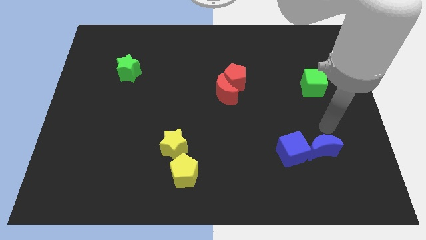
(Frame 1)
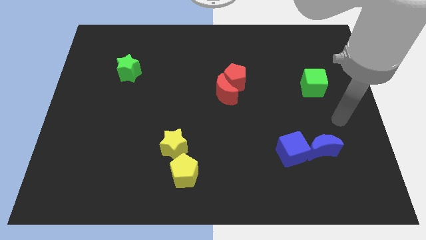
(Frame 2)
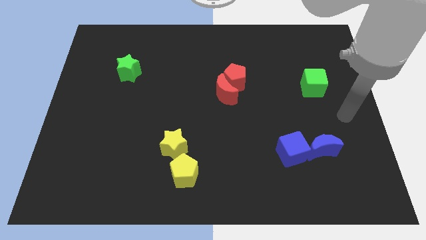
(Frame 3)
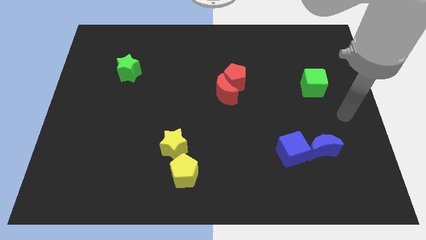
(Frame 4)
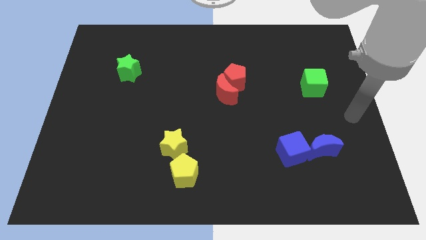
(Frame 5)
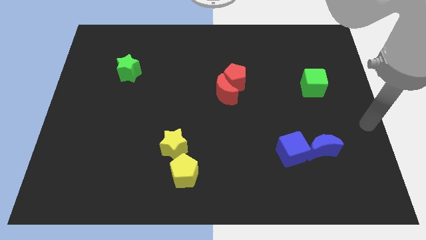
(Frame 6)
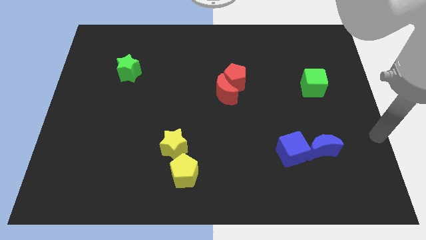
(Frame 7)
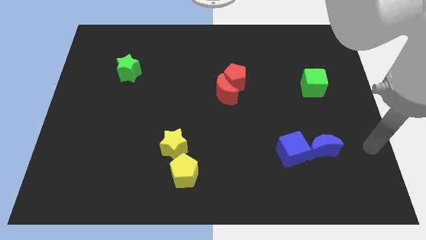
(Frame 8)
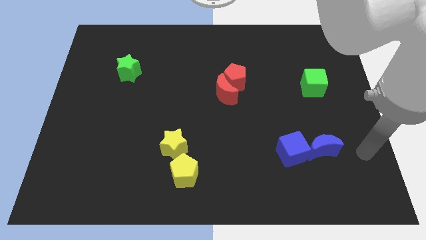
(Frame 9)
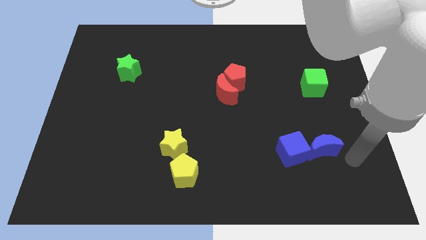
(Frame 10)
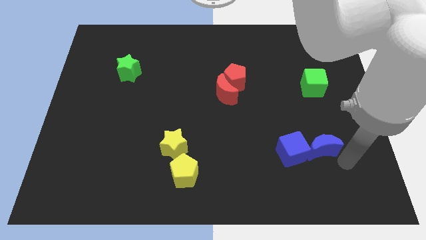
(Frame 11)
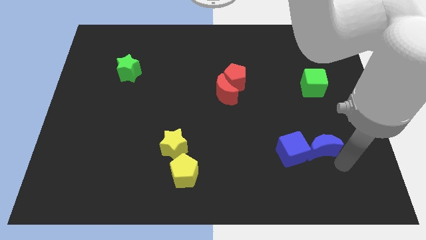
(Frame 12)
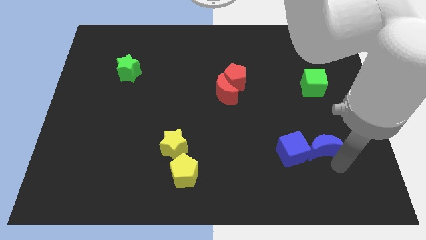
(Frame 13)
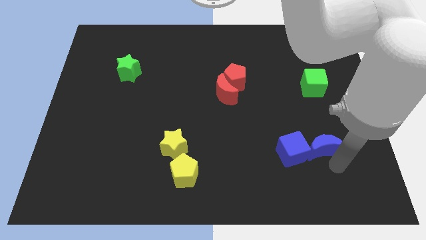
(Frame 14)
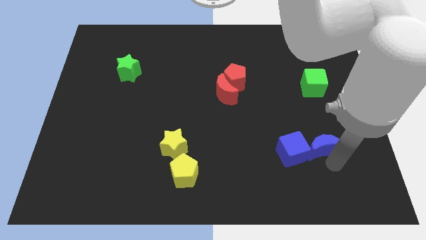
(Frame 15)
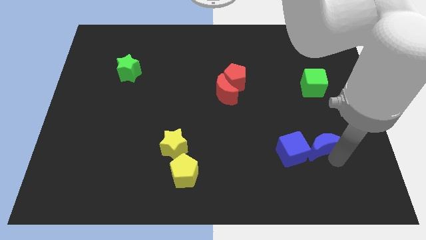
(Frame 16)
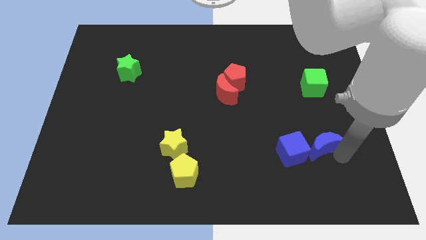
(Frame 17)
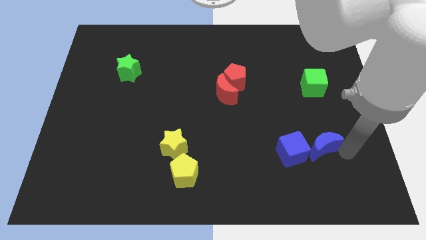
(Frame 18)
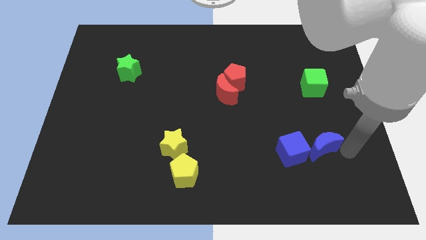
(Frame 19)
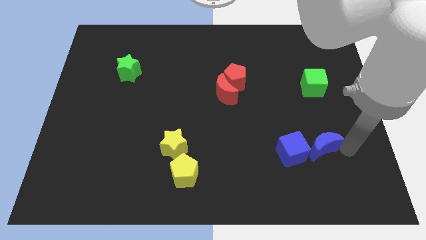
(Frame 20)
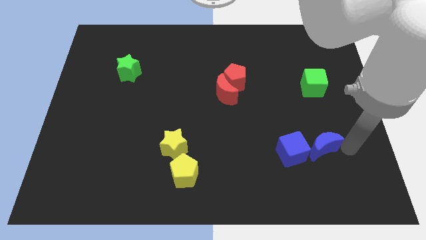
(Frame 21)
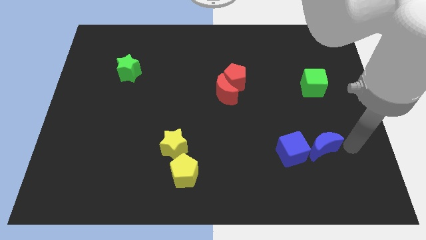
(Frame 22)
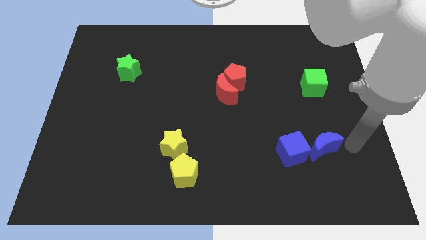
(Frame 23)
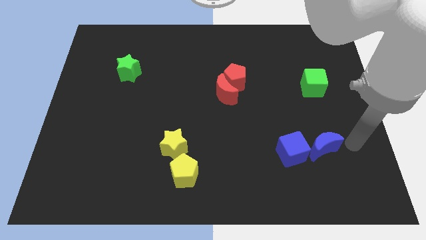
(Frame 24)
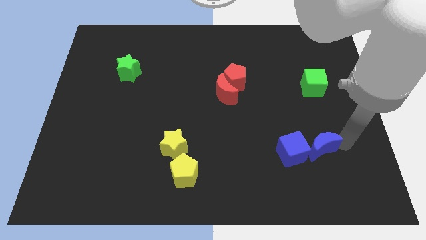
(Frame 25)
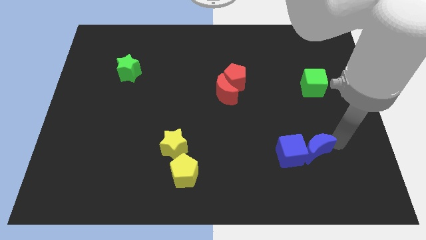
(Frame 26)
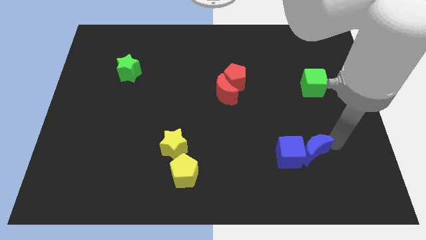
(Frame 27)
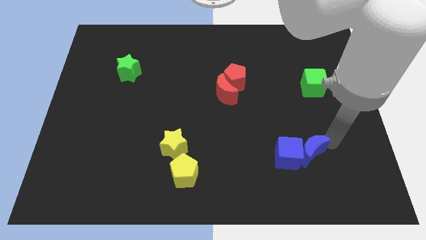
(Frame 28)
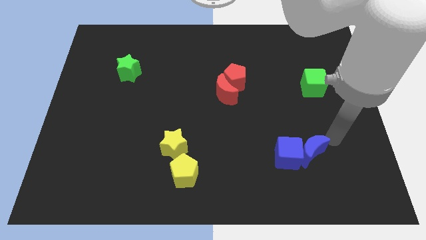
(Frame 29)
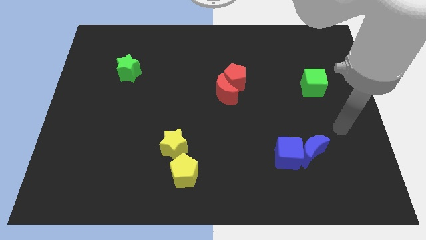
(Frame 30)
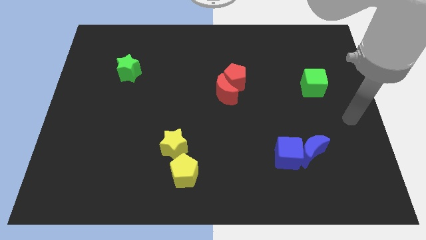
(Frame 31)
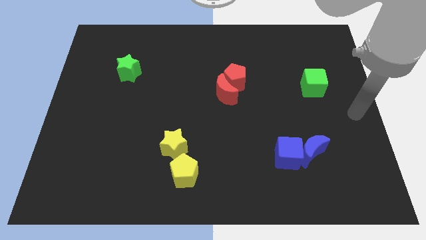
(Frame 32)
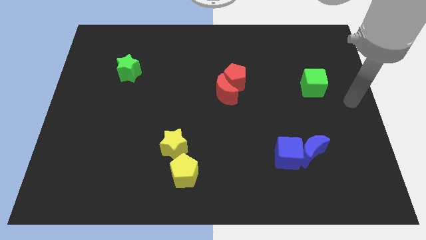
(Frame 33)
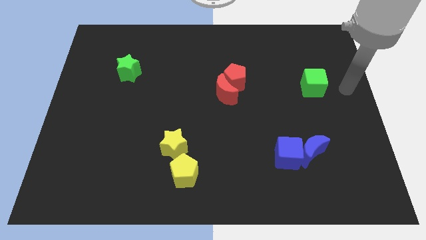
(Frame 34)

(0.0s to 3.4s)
push the blue blocks slightly to the left

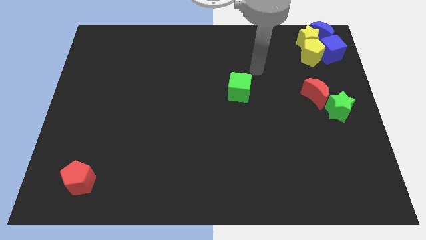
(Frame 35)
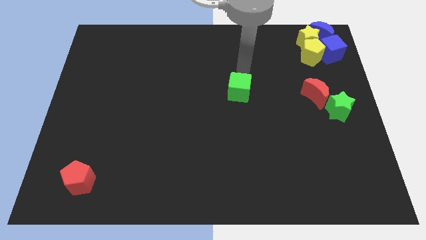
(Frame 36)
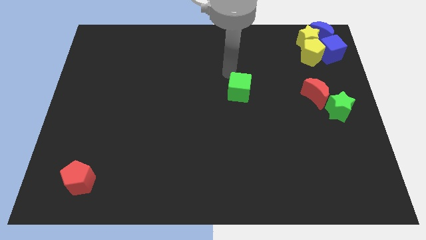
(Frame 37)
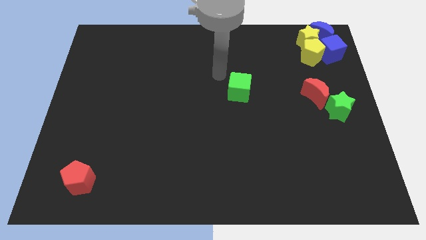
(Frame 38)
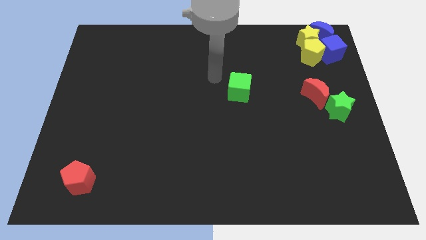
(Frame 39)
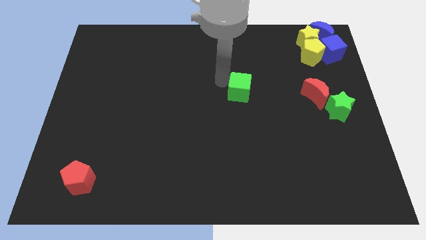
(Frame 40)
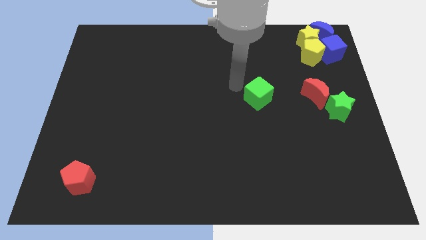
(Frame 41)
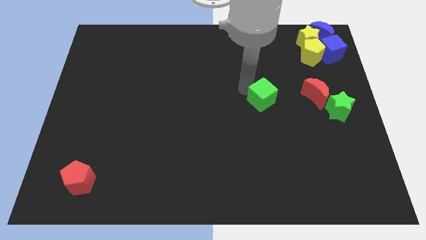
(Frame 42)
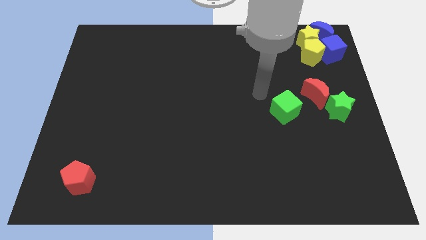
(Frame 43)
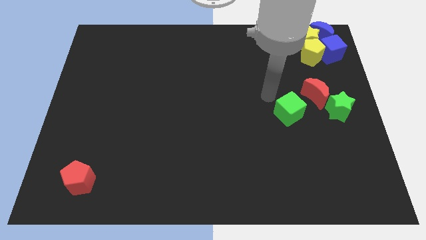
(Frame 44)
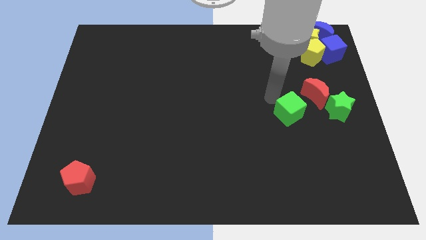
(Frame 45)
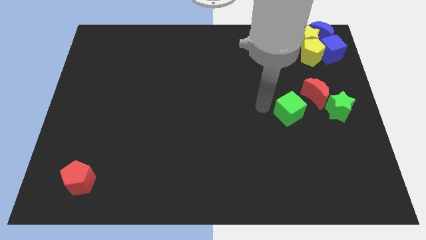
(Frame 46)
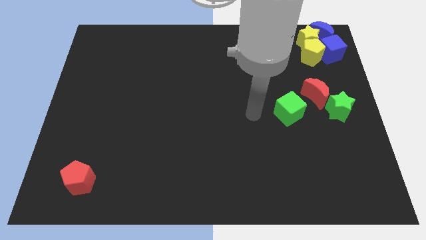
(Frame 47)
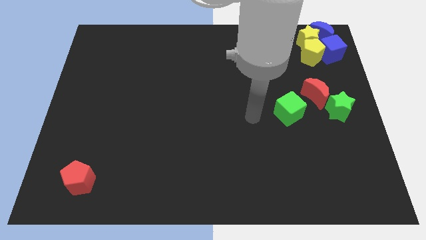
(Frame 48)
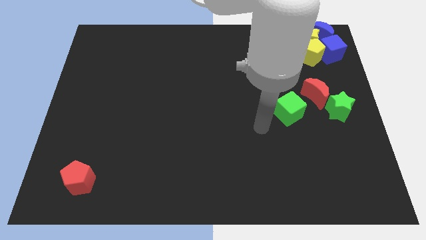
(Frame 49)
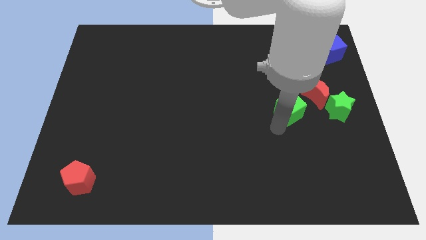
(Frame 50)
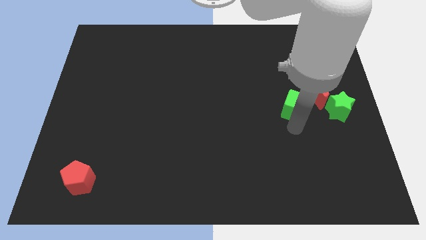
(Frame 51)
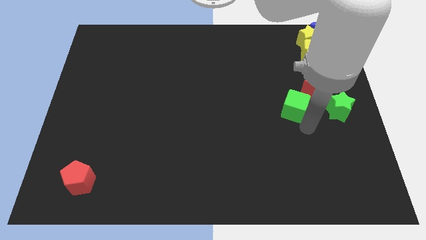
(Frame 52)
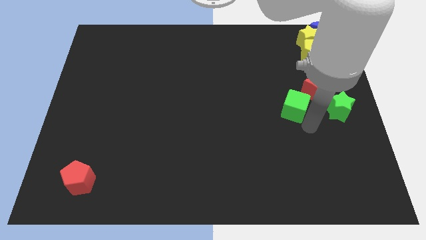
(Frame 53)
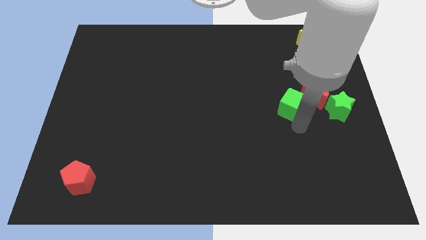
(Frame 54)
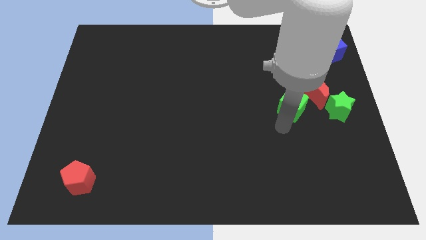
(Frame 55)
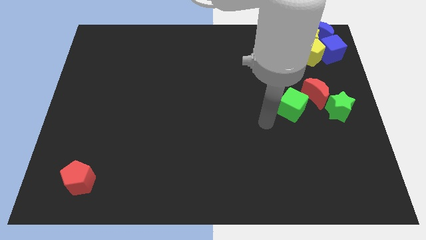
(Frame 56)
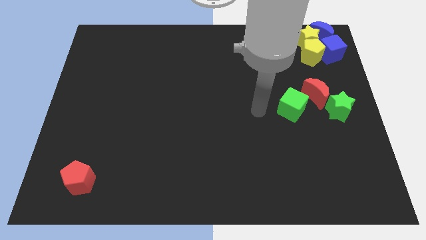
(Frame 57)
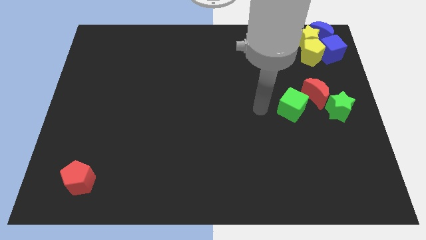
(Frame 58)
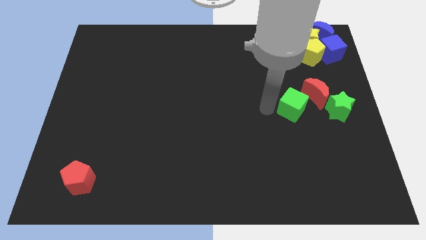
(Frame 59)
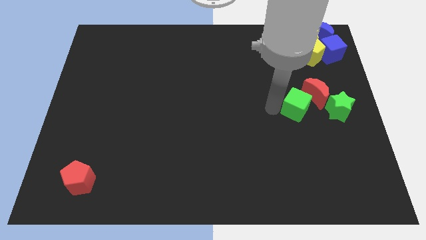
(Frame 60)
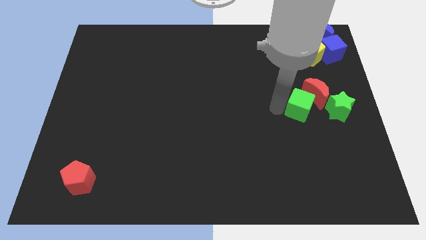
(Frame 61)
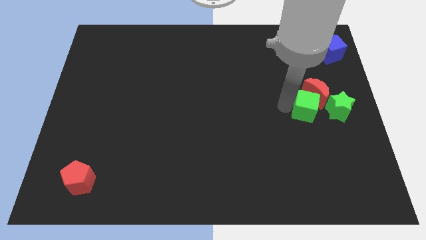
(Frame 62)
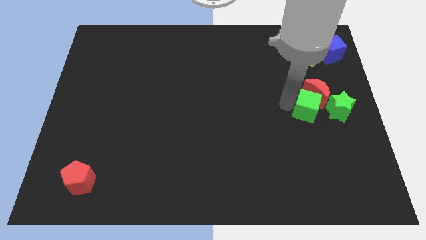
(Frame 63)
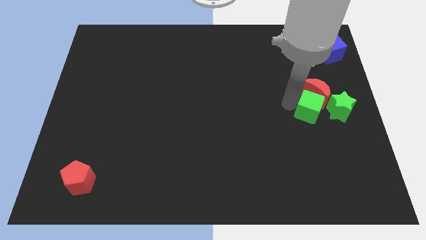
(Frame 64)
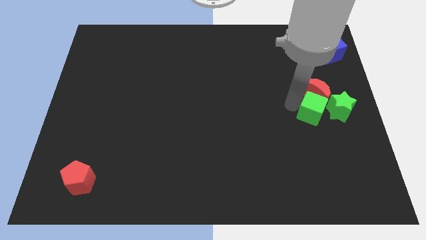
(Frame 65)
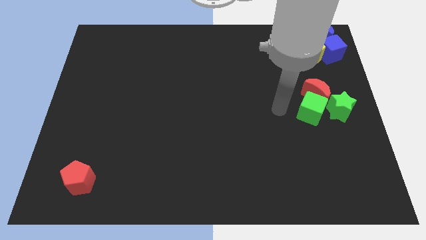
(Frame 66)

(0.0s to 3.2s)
push the green cube into the group of blocks at the center right of the board

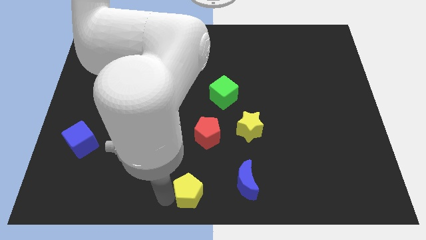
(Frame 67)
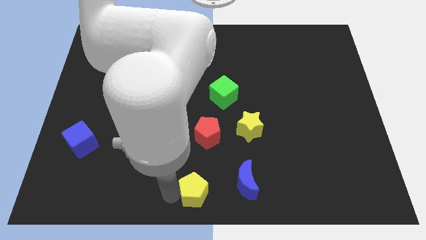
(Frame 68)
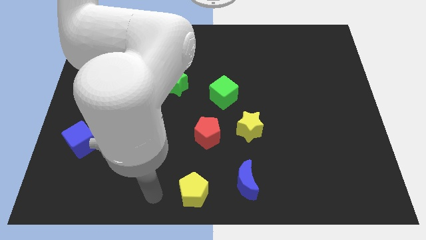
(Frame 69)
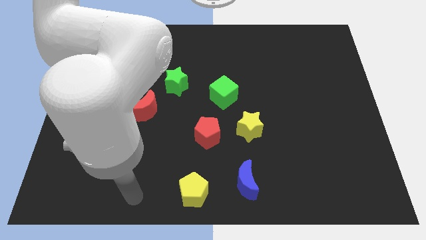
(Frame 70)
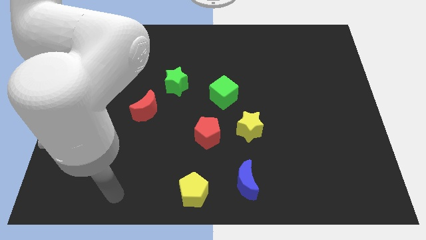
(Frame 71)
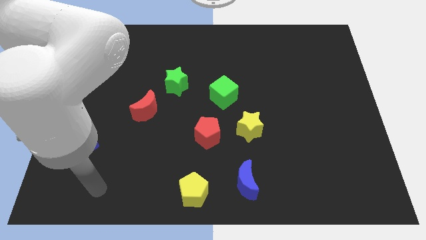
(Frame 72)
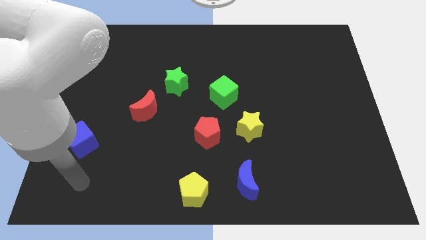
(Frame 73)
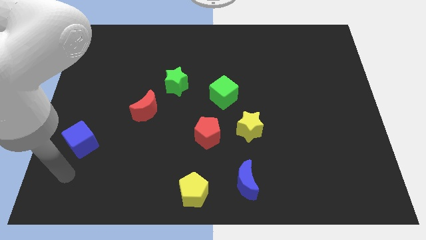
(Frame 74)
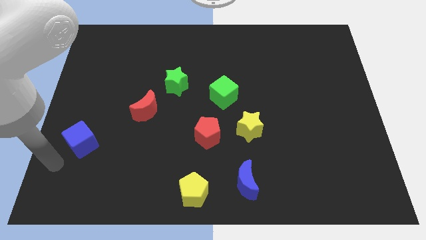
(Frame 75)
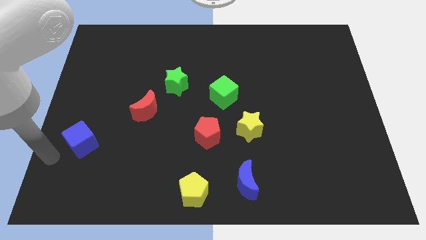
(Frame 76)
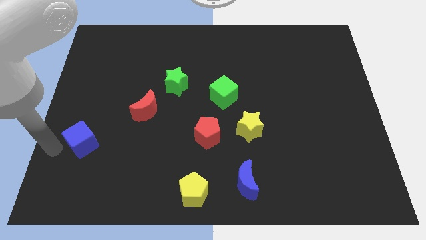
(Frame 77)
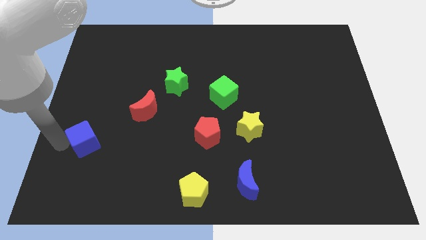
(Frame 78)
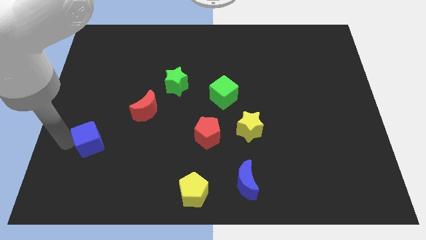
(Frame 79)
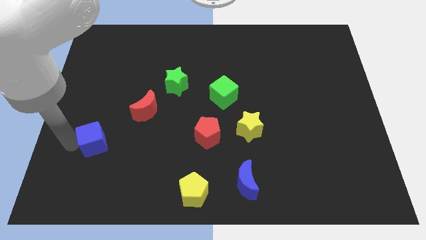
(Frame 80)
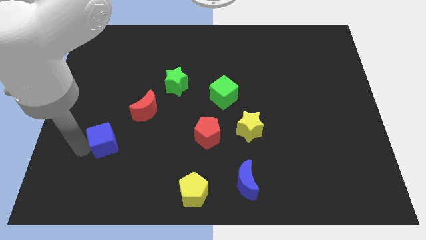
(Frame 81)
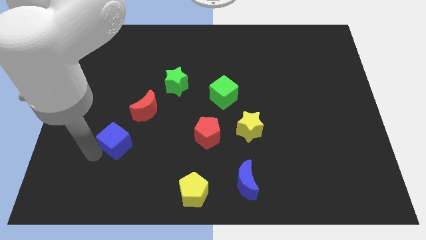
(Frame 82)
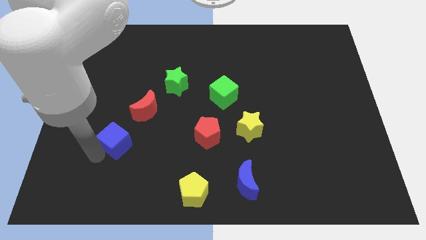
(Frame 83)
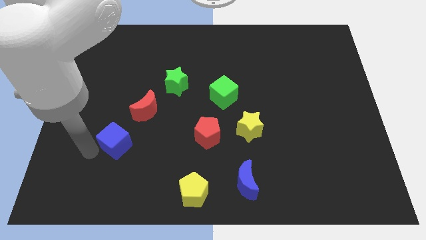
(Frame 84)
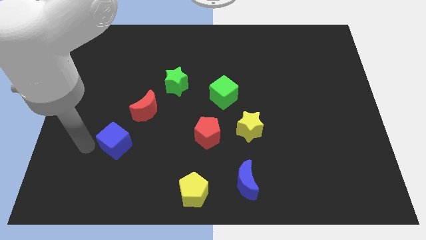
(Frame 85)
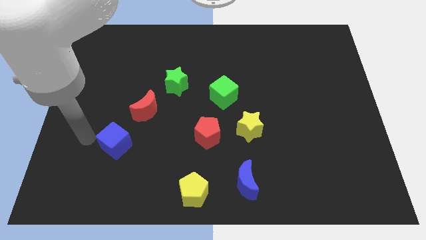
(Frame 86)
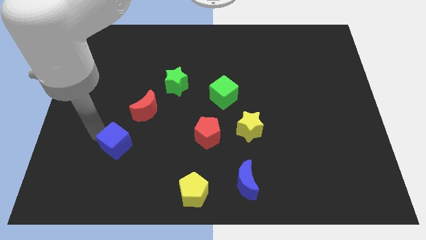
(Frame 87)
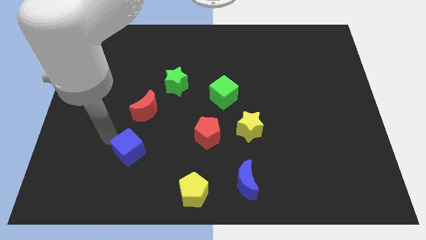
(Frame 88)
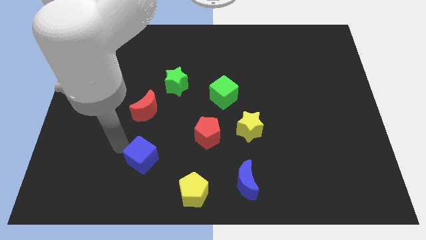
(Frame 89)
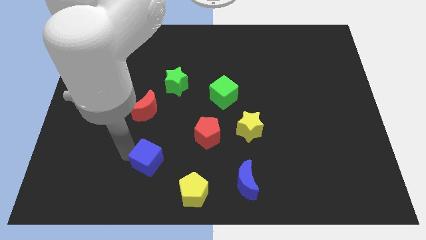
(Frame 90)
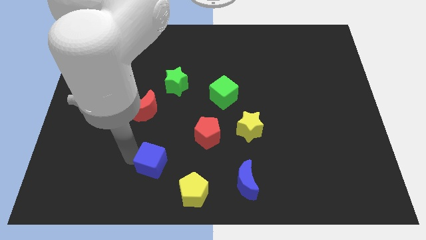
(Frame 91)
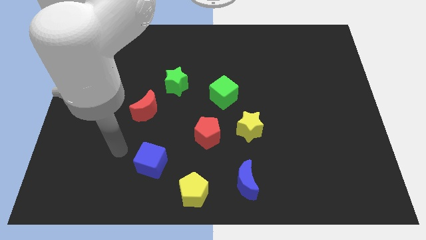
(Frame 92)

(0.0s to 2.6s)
put the blue cube below the red crescent
